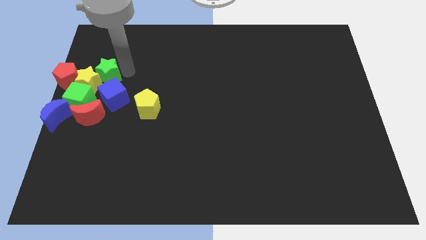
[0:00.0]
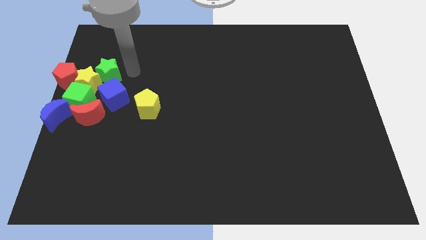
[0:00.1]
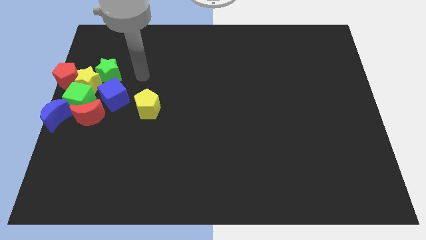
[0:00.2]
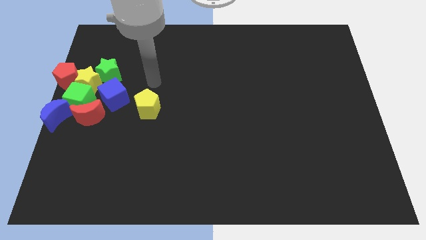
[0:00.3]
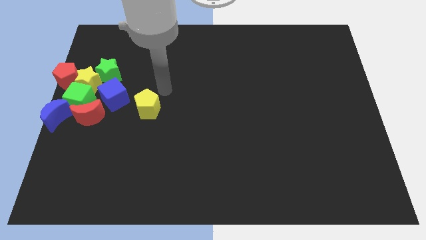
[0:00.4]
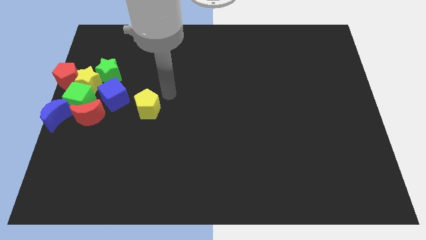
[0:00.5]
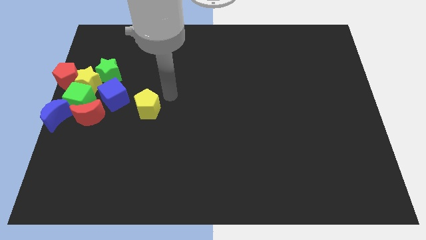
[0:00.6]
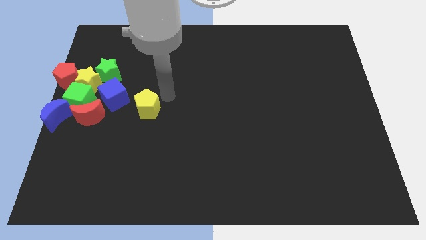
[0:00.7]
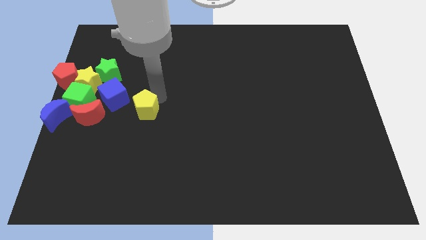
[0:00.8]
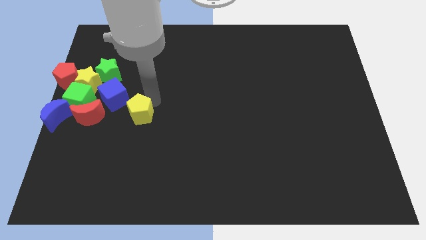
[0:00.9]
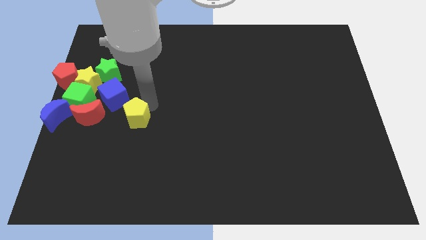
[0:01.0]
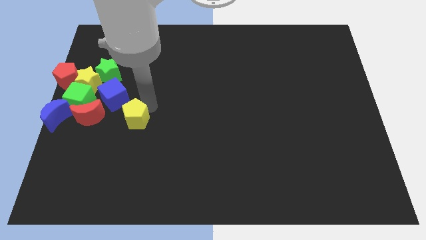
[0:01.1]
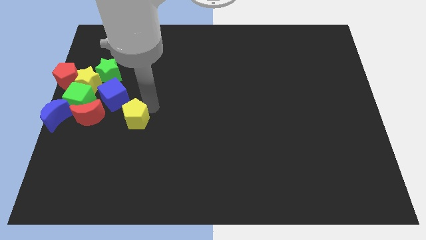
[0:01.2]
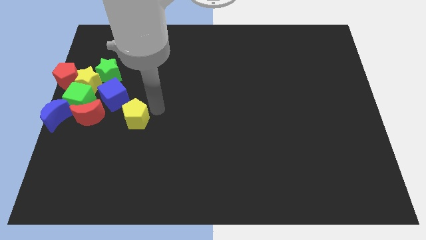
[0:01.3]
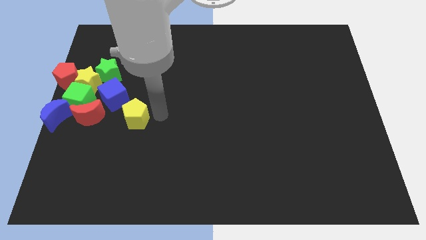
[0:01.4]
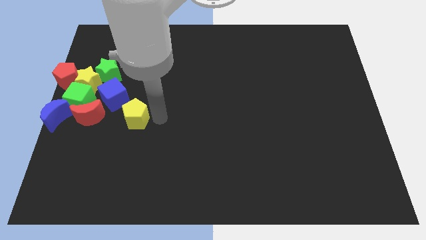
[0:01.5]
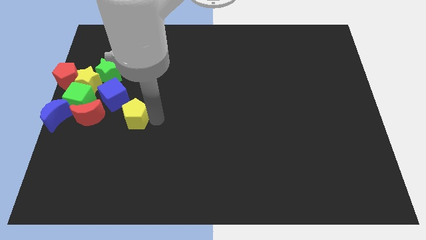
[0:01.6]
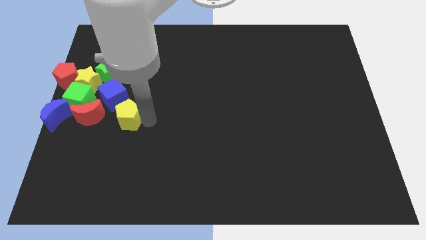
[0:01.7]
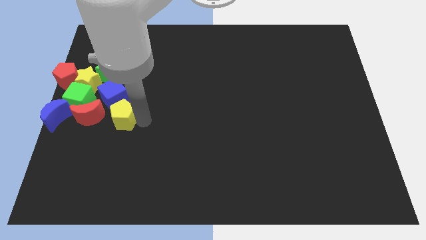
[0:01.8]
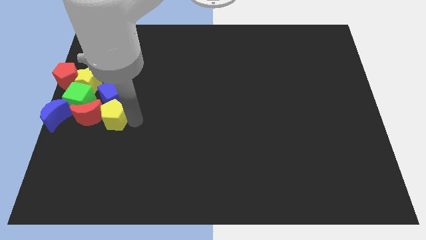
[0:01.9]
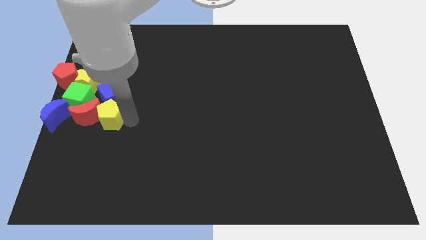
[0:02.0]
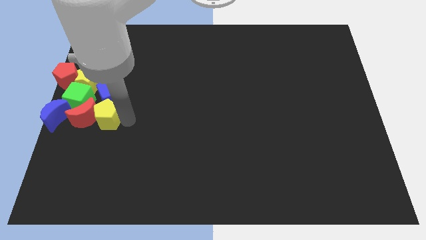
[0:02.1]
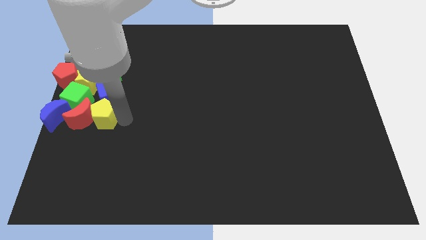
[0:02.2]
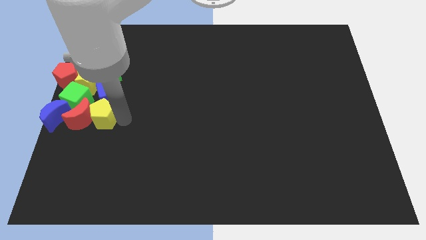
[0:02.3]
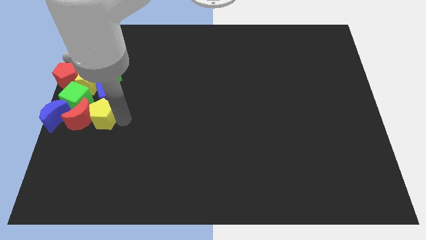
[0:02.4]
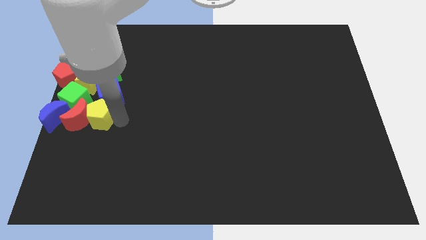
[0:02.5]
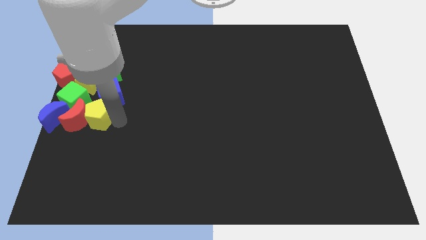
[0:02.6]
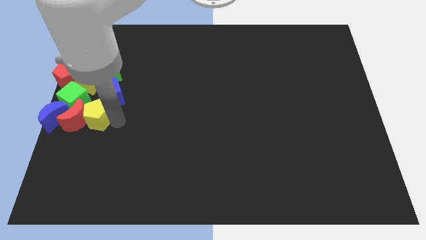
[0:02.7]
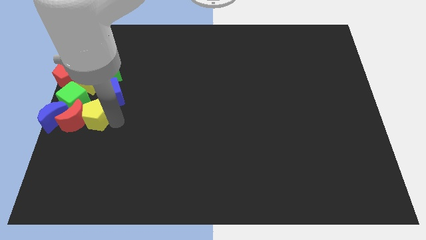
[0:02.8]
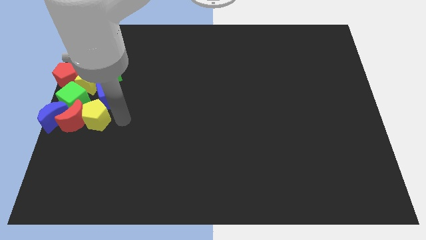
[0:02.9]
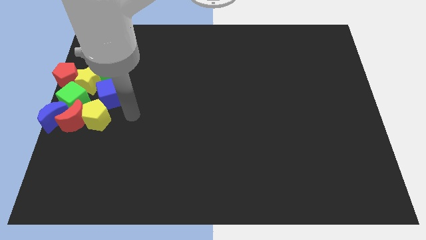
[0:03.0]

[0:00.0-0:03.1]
move the yellow pentagon into the right side of the red moon

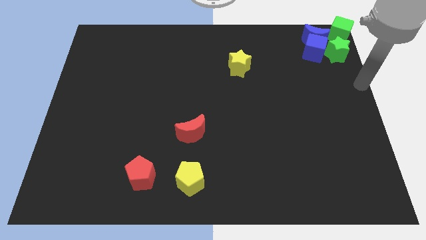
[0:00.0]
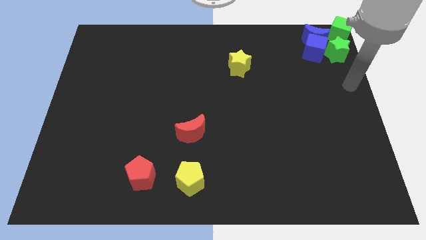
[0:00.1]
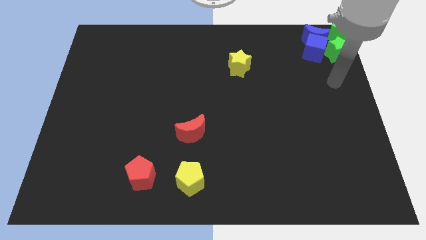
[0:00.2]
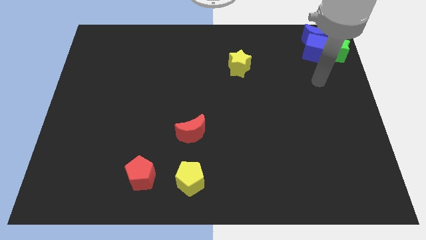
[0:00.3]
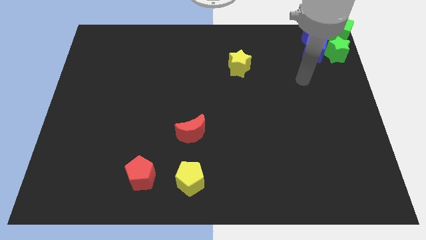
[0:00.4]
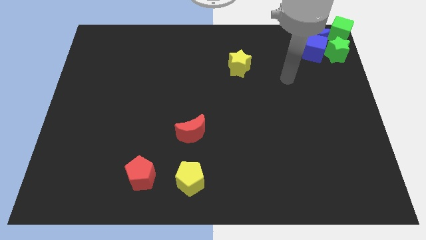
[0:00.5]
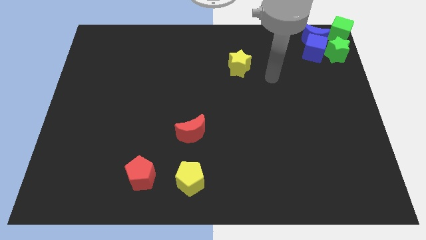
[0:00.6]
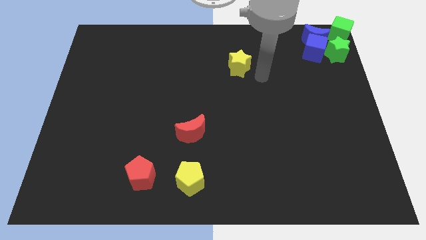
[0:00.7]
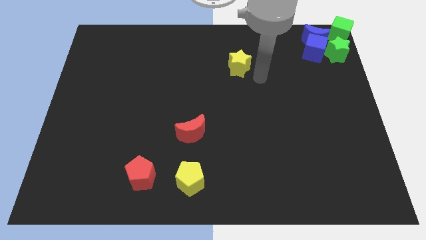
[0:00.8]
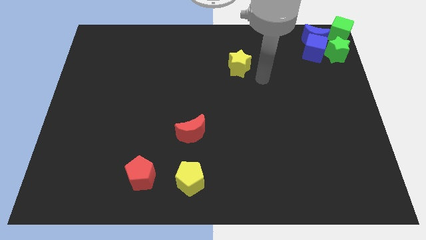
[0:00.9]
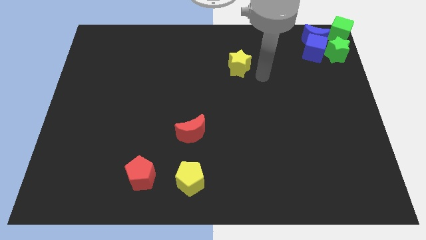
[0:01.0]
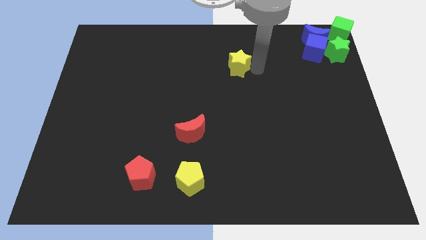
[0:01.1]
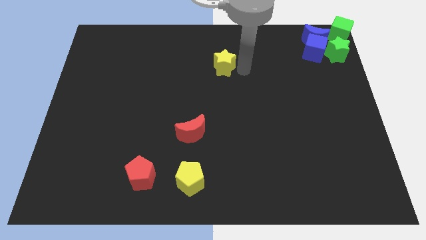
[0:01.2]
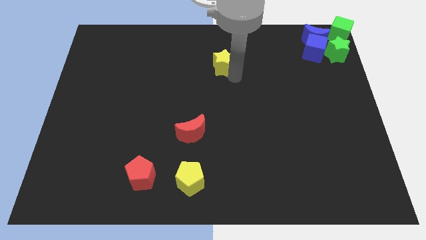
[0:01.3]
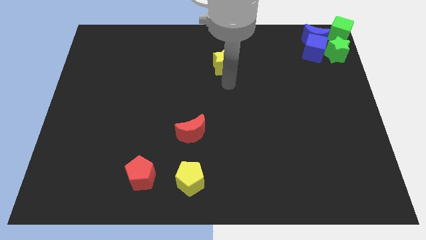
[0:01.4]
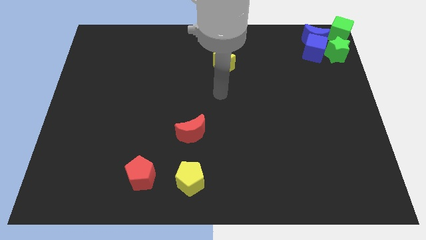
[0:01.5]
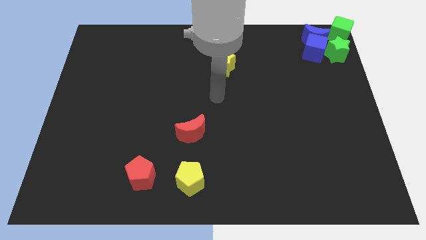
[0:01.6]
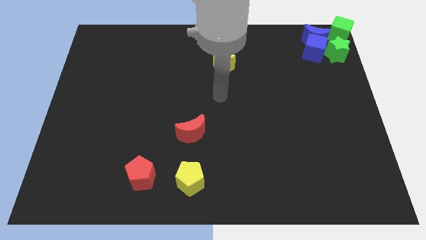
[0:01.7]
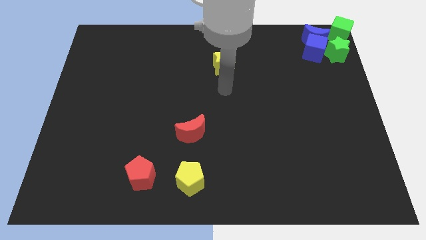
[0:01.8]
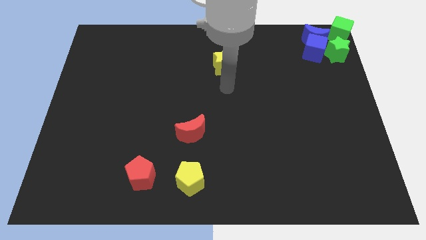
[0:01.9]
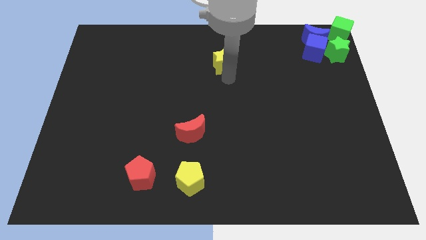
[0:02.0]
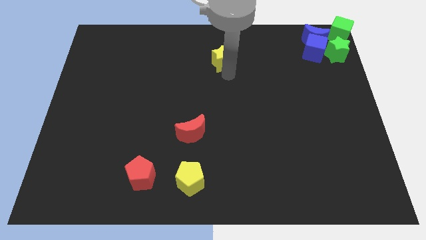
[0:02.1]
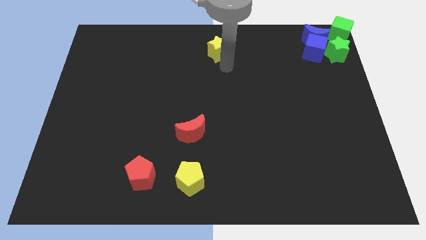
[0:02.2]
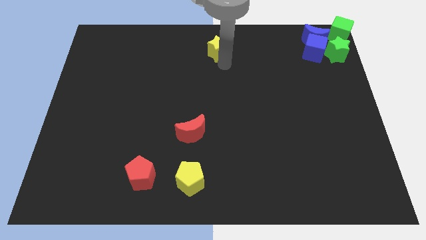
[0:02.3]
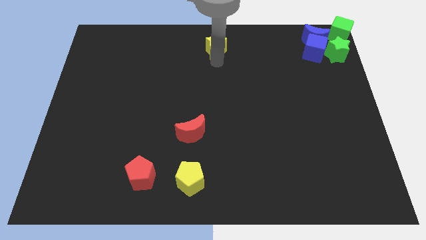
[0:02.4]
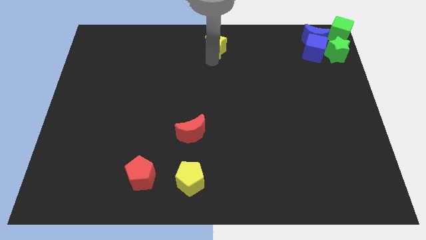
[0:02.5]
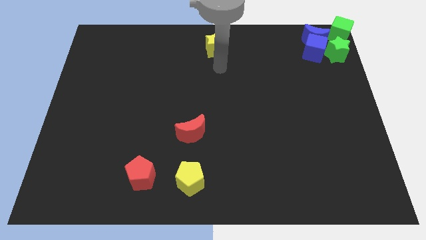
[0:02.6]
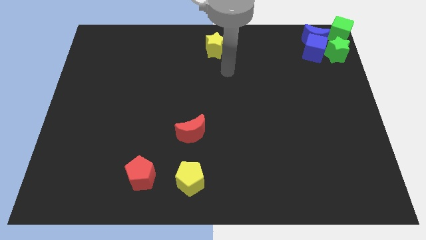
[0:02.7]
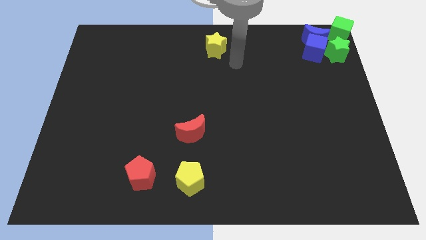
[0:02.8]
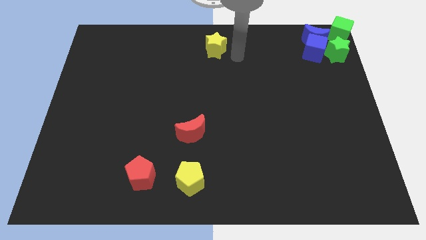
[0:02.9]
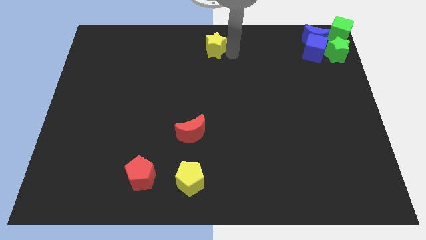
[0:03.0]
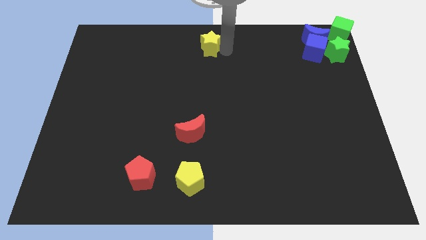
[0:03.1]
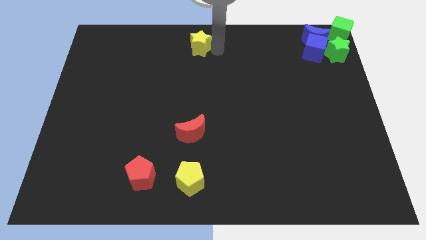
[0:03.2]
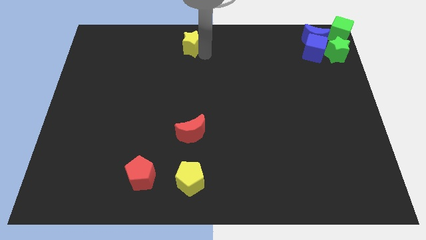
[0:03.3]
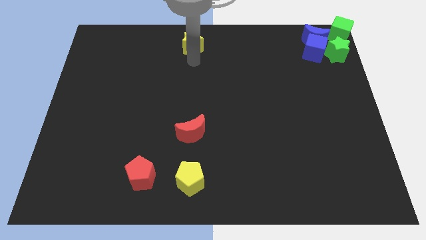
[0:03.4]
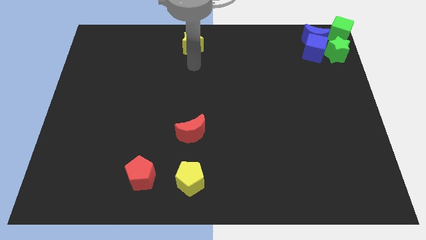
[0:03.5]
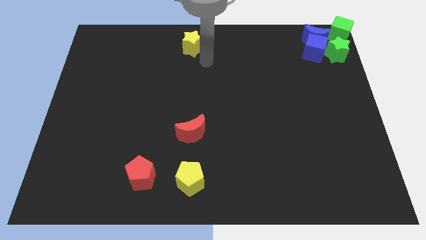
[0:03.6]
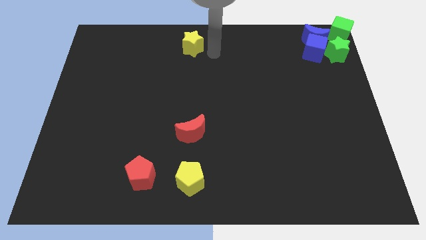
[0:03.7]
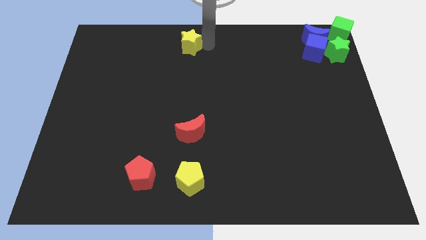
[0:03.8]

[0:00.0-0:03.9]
move the yellow star to the top center of the board

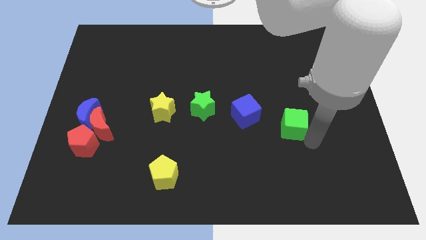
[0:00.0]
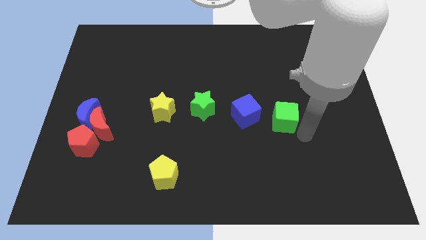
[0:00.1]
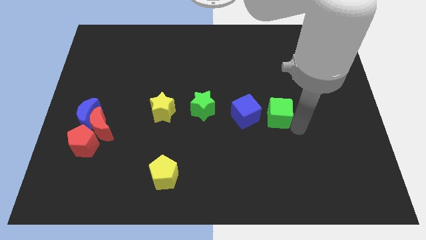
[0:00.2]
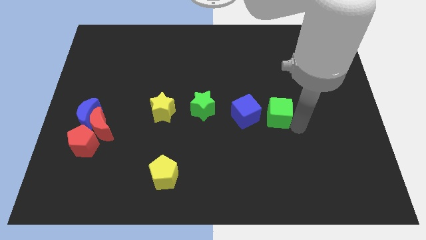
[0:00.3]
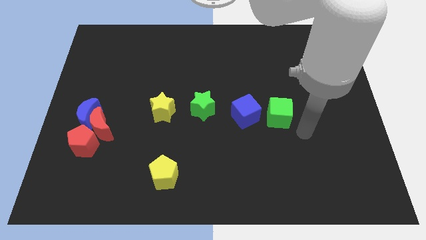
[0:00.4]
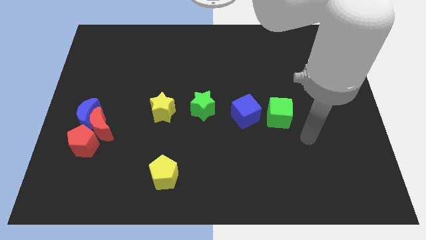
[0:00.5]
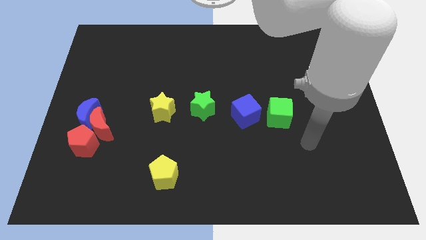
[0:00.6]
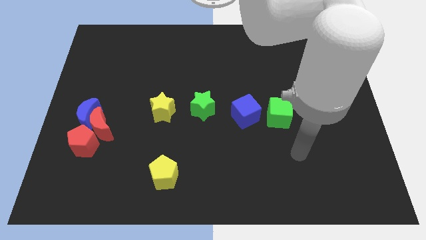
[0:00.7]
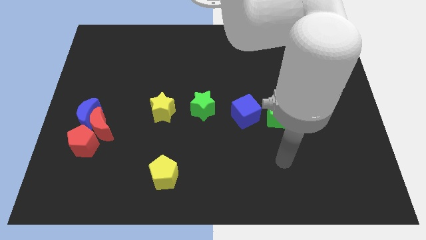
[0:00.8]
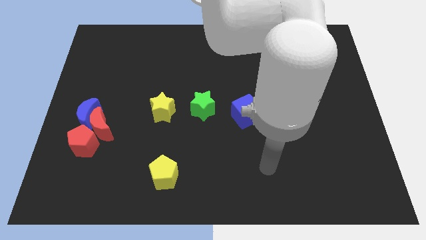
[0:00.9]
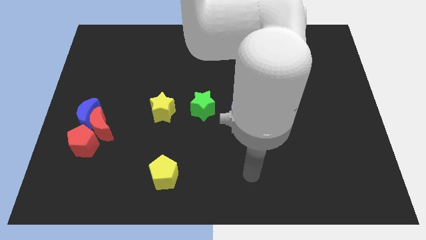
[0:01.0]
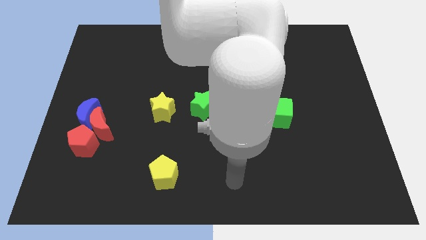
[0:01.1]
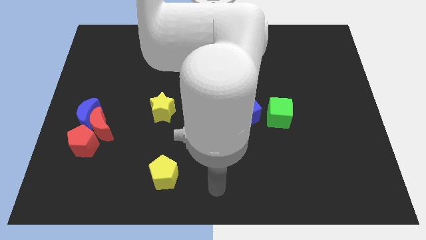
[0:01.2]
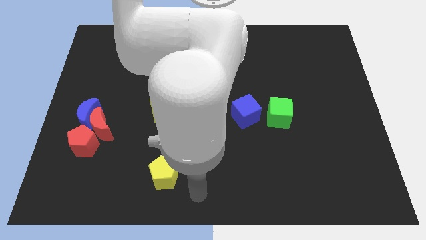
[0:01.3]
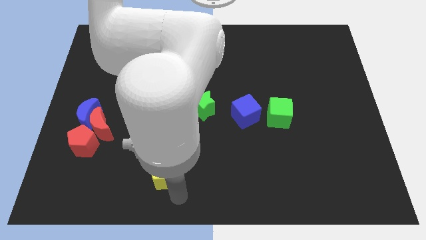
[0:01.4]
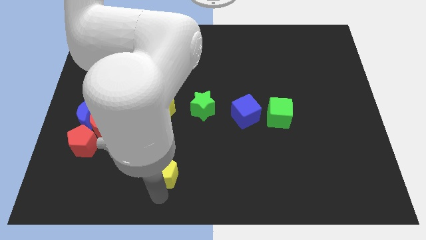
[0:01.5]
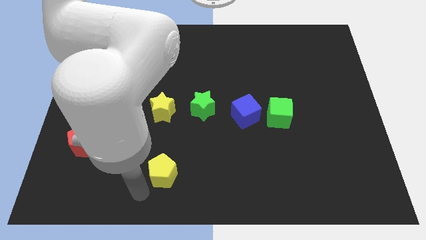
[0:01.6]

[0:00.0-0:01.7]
move the green cube right beside the blue cube

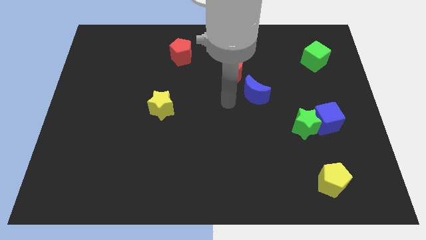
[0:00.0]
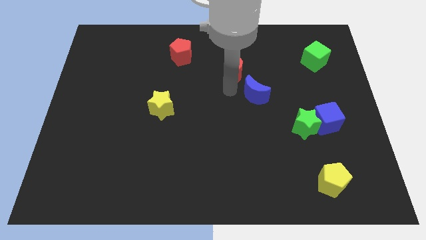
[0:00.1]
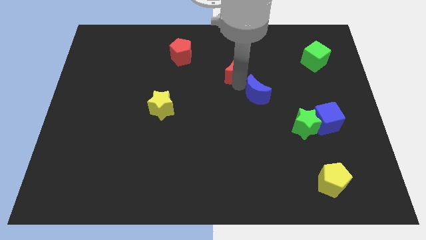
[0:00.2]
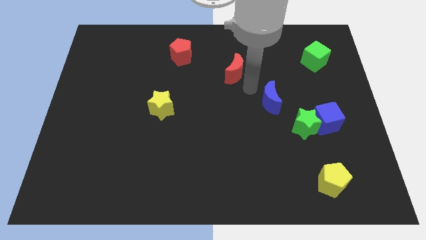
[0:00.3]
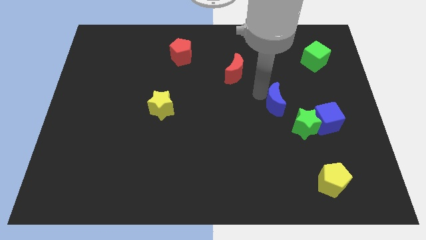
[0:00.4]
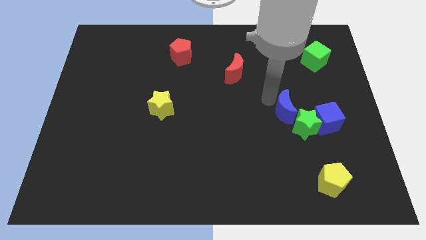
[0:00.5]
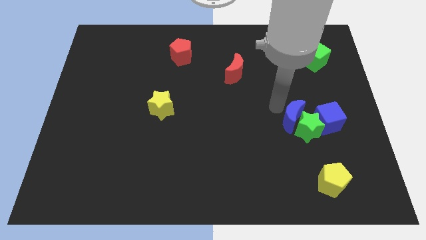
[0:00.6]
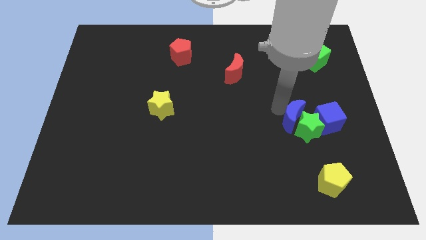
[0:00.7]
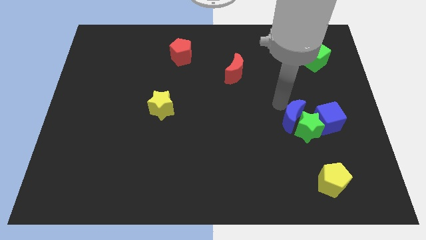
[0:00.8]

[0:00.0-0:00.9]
move blue crescent to the top of green star
